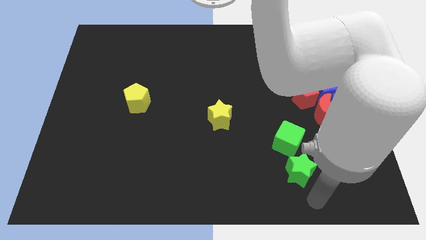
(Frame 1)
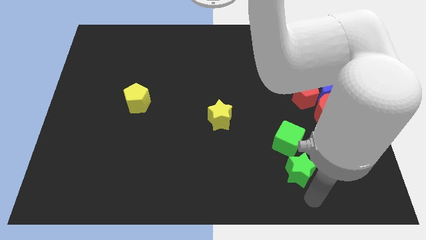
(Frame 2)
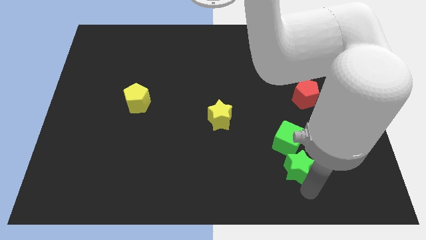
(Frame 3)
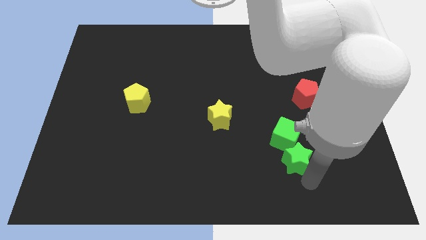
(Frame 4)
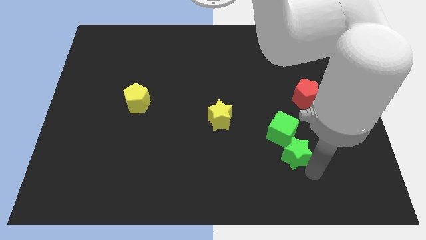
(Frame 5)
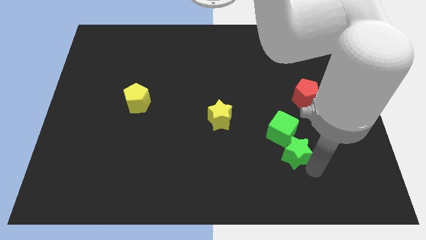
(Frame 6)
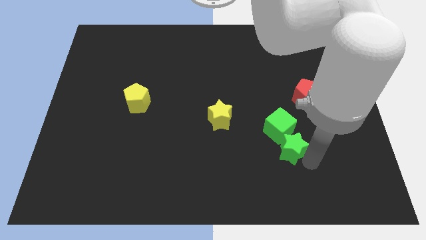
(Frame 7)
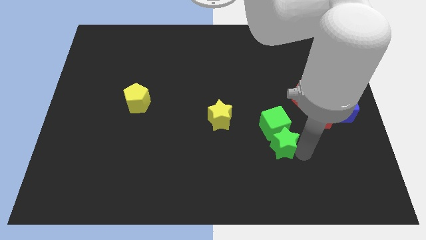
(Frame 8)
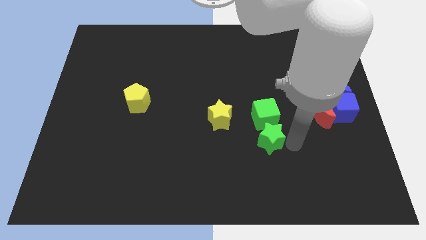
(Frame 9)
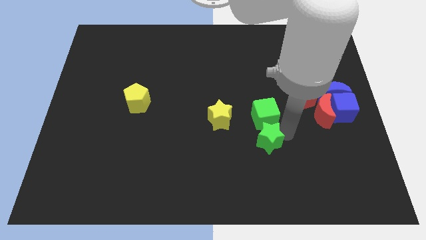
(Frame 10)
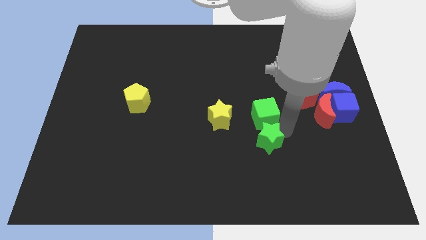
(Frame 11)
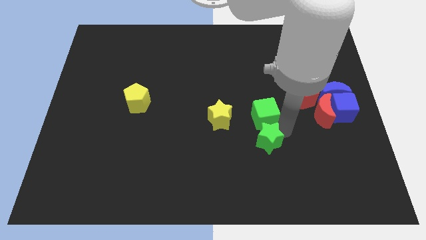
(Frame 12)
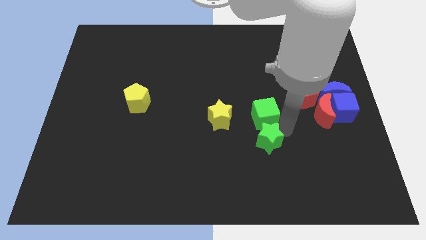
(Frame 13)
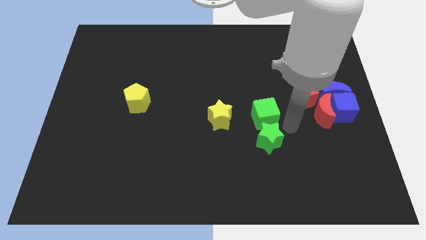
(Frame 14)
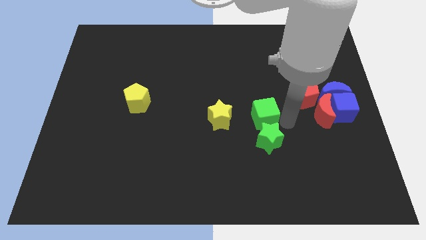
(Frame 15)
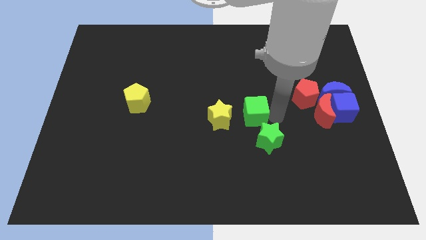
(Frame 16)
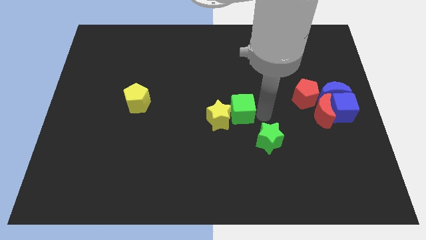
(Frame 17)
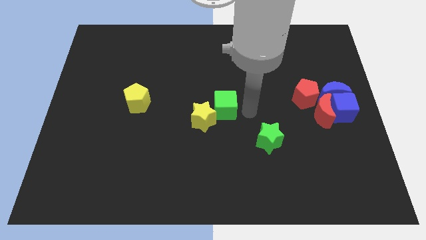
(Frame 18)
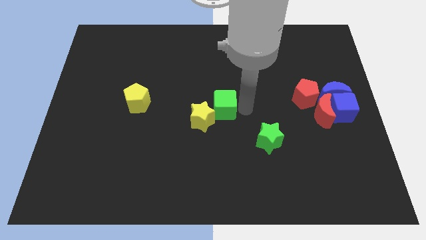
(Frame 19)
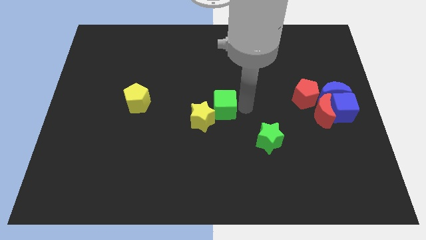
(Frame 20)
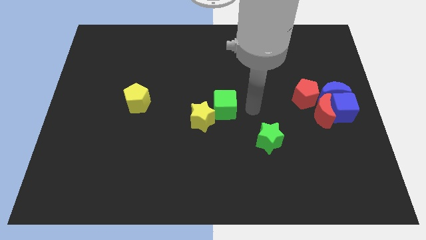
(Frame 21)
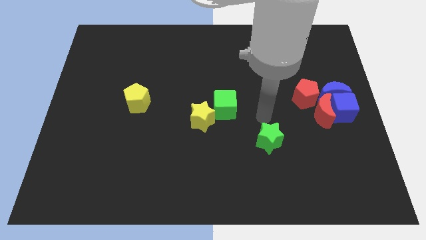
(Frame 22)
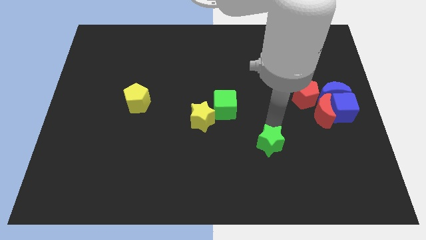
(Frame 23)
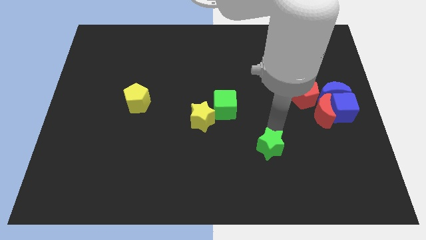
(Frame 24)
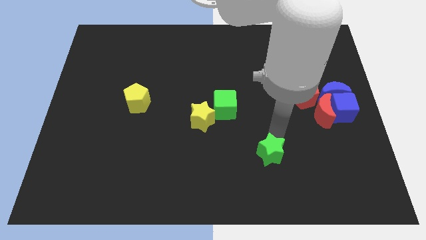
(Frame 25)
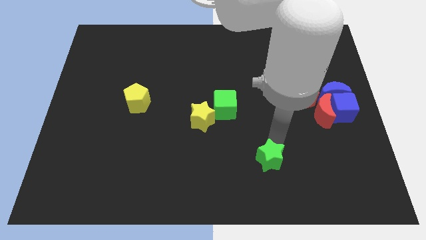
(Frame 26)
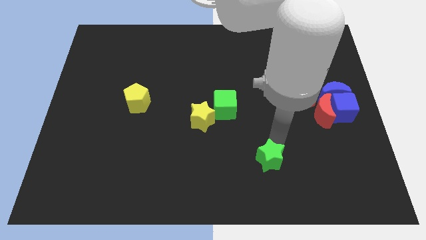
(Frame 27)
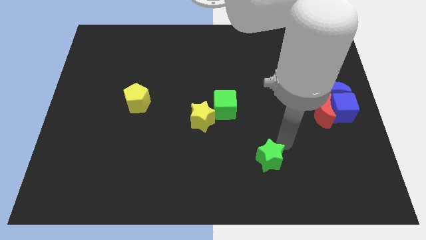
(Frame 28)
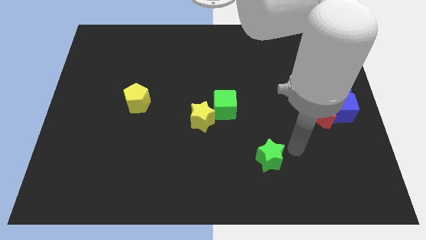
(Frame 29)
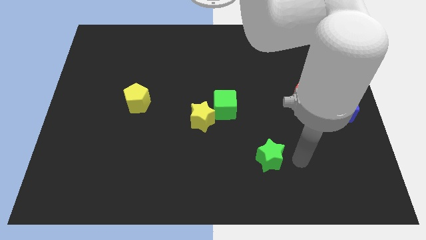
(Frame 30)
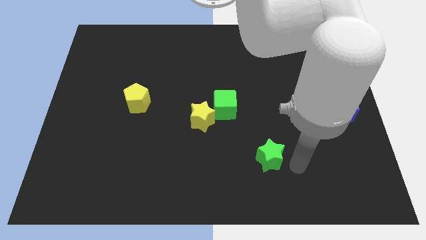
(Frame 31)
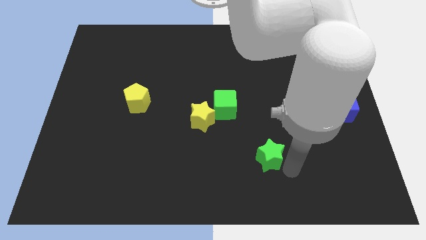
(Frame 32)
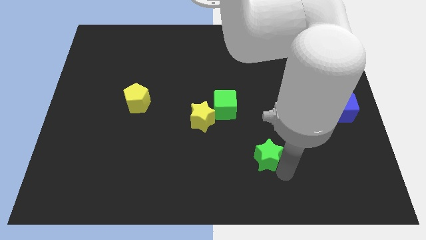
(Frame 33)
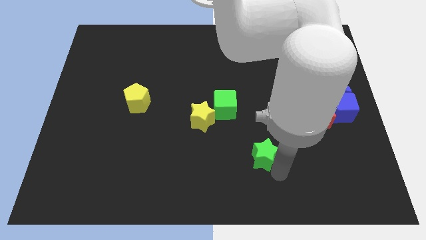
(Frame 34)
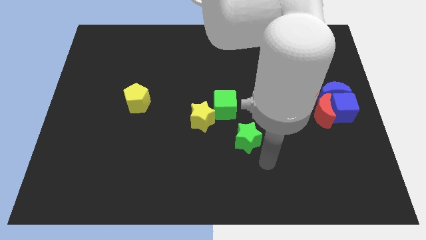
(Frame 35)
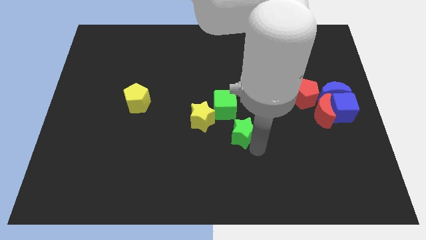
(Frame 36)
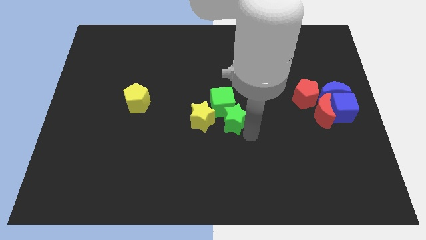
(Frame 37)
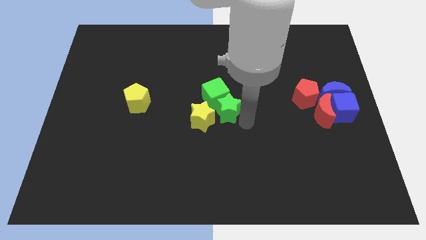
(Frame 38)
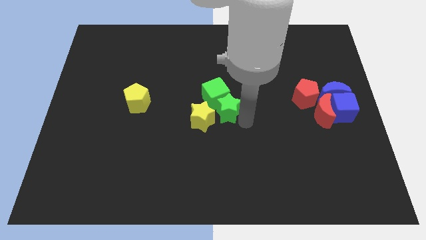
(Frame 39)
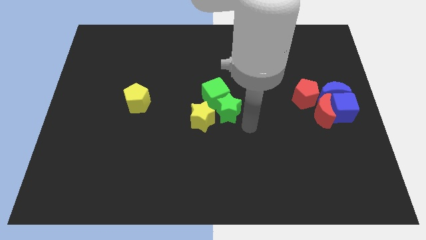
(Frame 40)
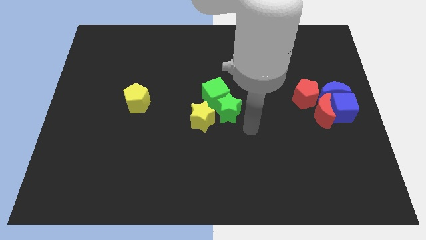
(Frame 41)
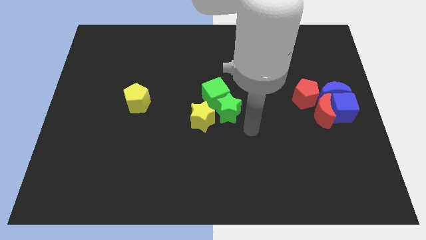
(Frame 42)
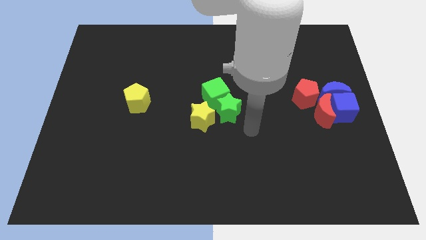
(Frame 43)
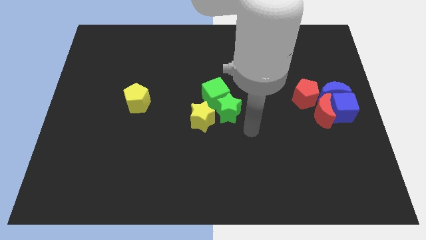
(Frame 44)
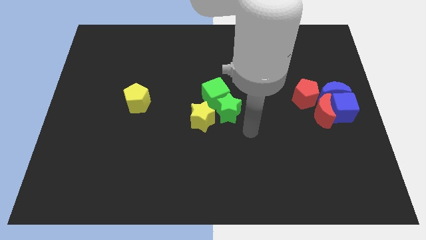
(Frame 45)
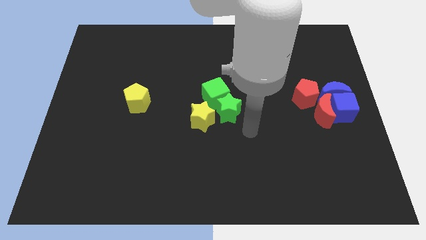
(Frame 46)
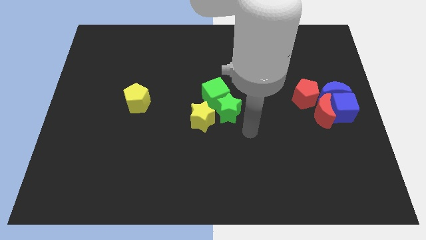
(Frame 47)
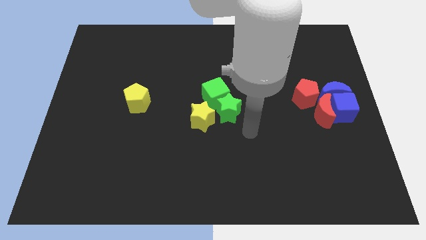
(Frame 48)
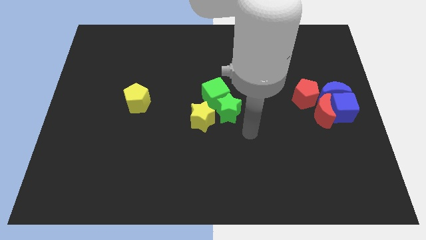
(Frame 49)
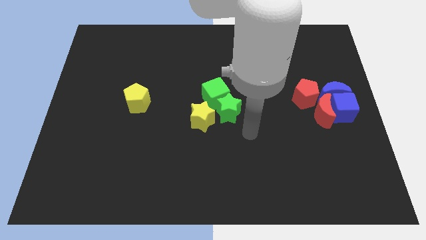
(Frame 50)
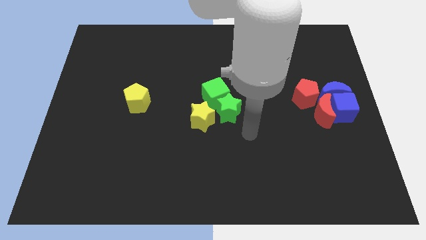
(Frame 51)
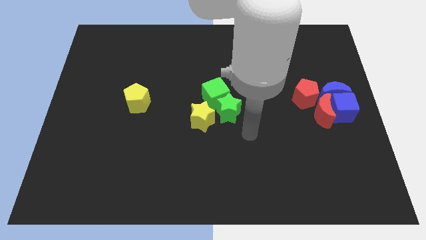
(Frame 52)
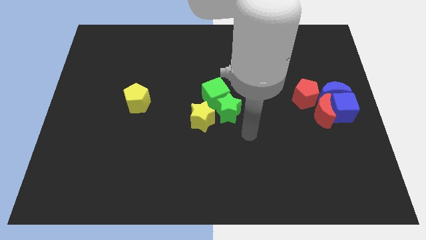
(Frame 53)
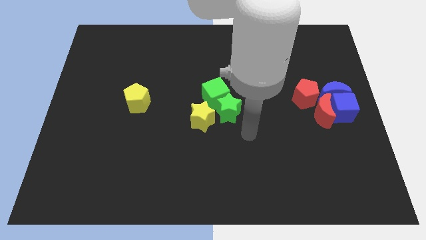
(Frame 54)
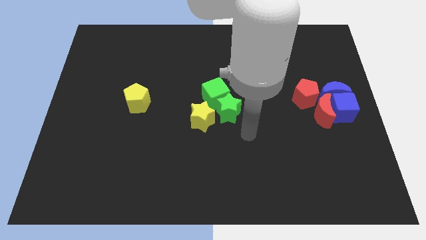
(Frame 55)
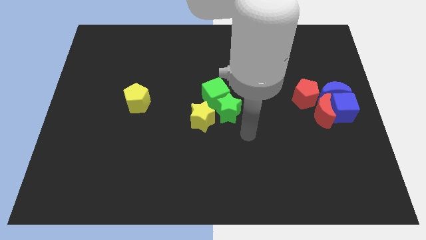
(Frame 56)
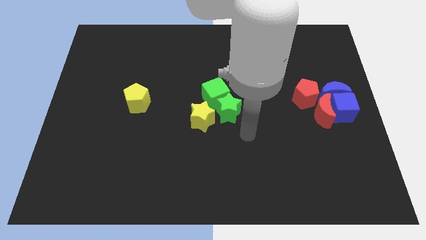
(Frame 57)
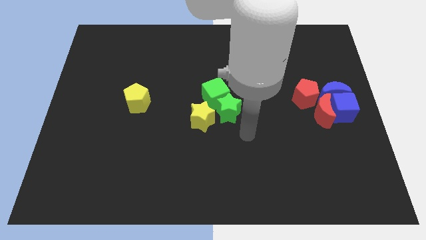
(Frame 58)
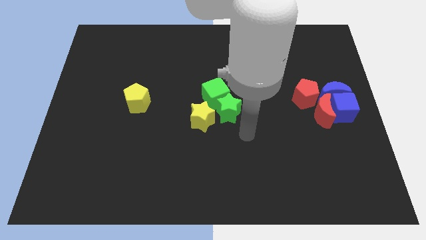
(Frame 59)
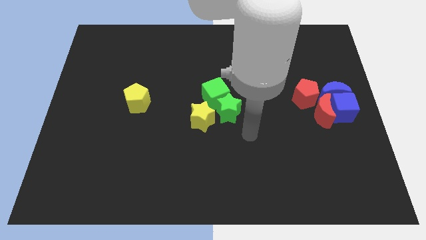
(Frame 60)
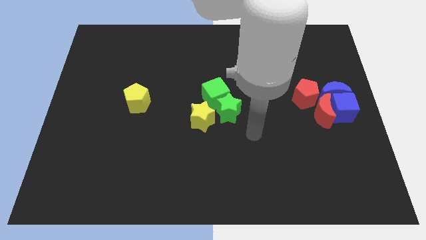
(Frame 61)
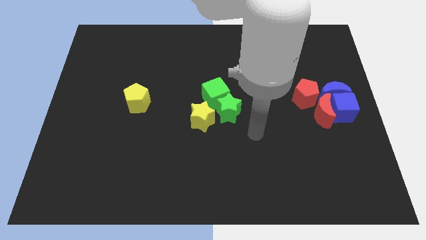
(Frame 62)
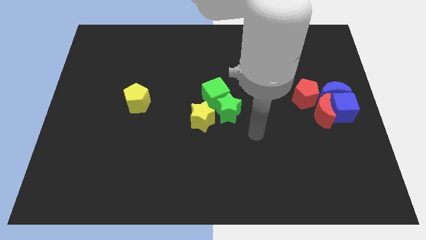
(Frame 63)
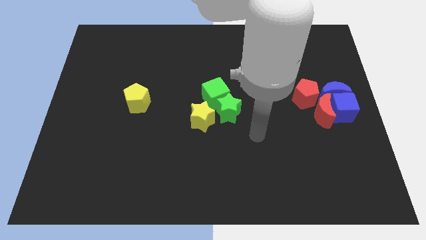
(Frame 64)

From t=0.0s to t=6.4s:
push the green blocks towards center

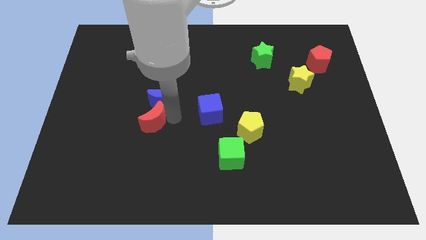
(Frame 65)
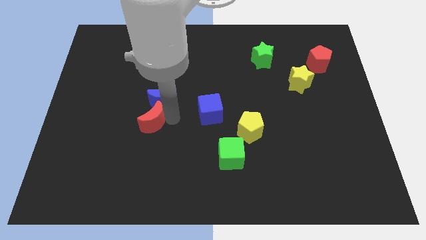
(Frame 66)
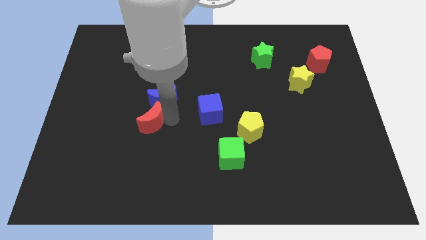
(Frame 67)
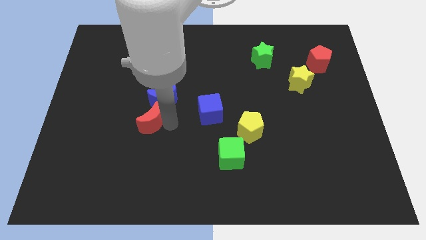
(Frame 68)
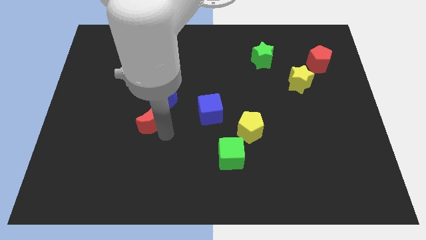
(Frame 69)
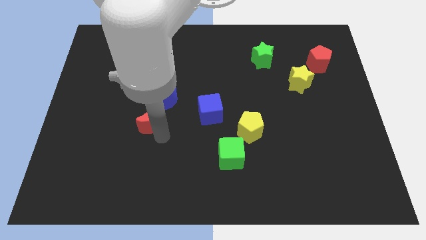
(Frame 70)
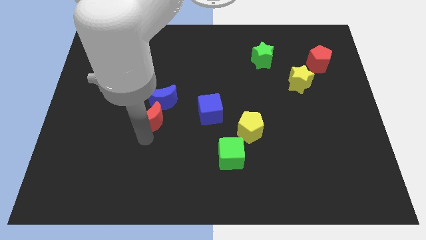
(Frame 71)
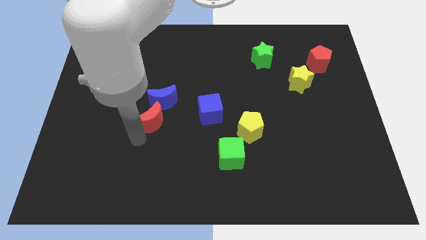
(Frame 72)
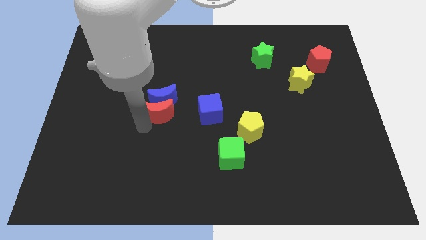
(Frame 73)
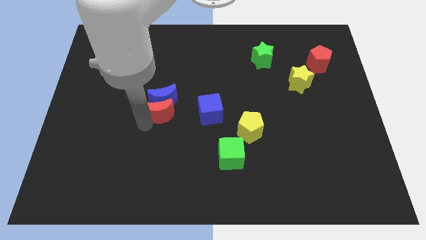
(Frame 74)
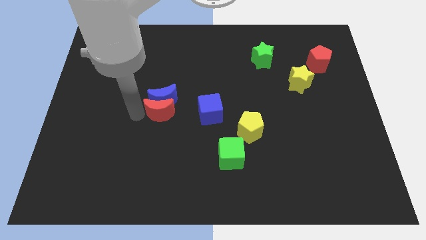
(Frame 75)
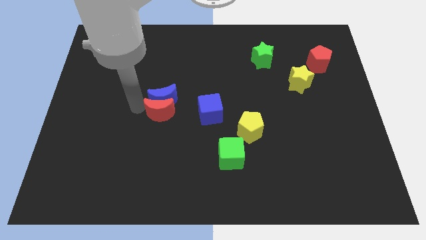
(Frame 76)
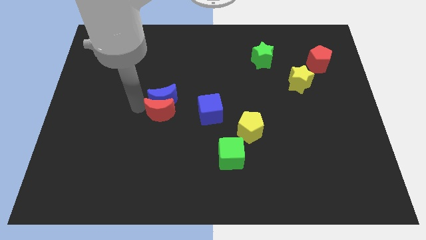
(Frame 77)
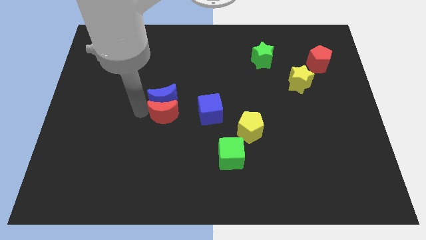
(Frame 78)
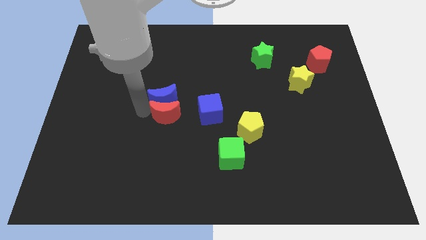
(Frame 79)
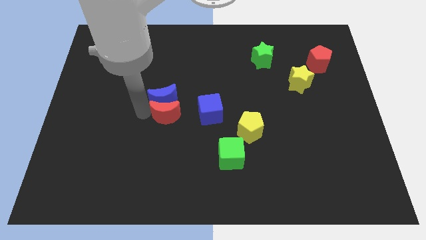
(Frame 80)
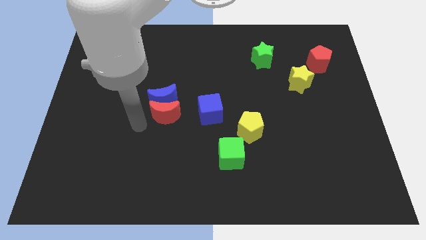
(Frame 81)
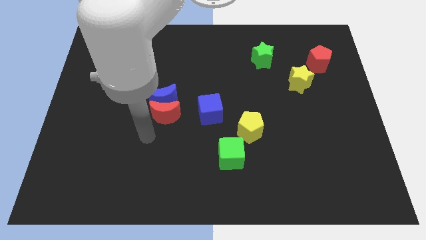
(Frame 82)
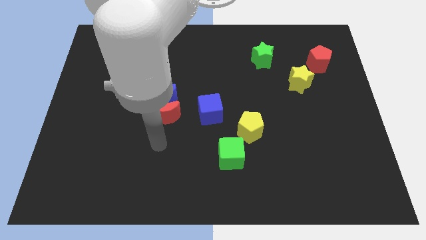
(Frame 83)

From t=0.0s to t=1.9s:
push the red crescent into the blue crescent

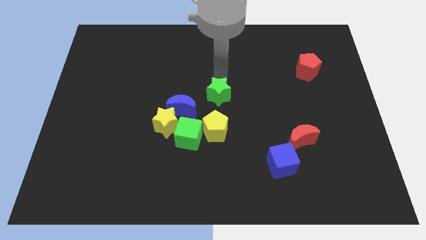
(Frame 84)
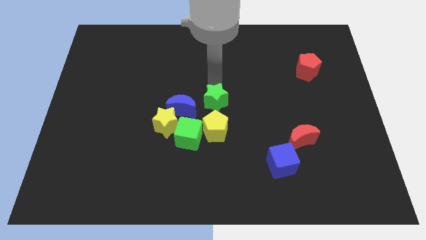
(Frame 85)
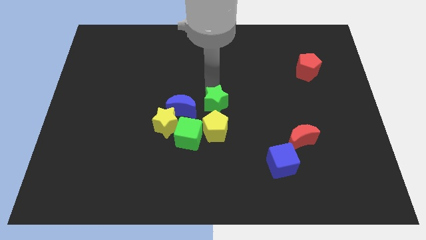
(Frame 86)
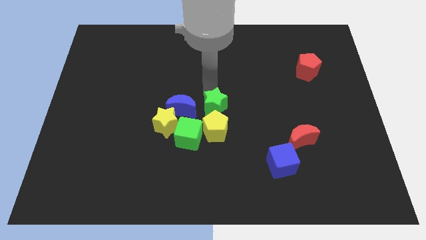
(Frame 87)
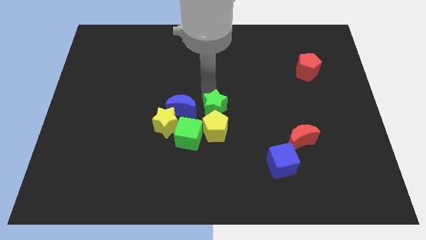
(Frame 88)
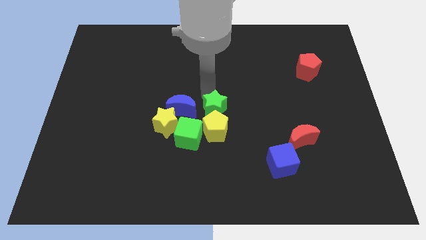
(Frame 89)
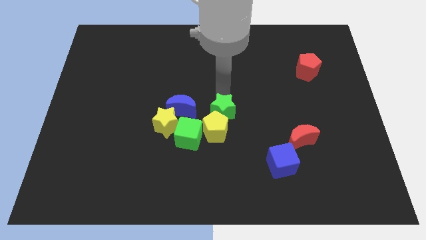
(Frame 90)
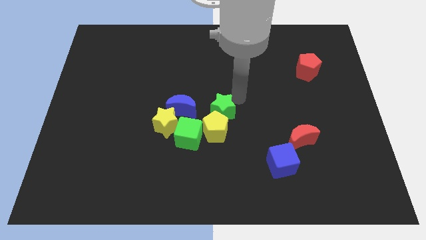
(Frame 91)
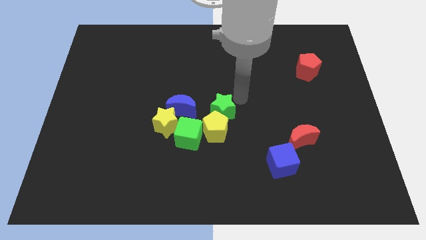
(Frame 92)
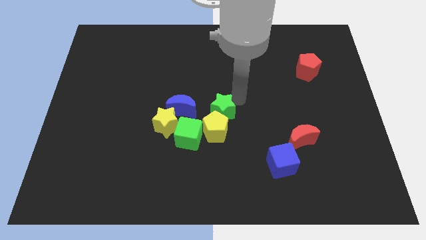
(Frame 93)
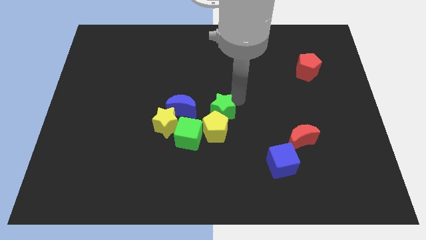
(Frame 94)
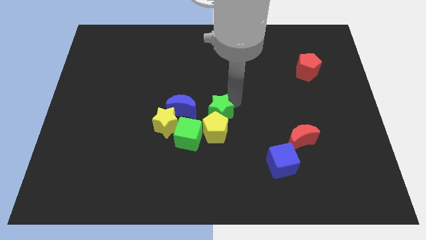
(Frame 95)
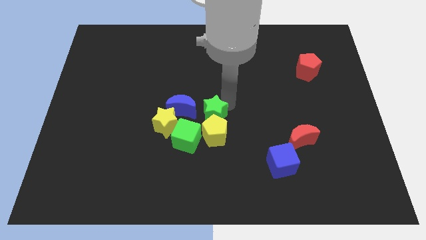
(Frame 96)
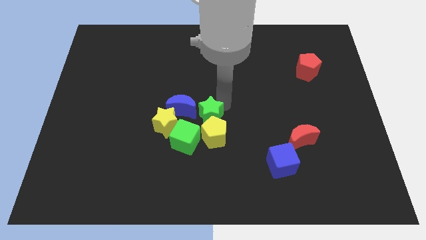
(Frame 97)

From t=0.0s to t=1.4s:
slide the green star into the yellow pentagon
